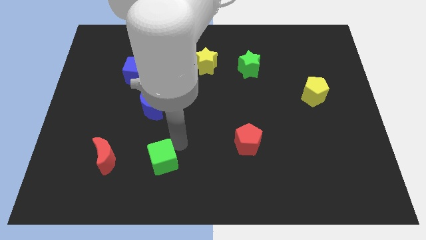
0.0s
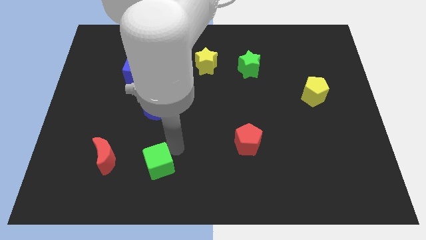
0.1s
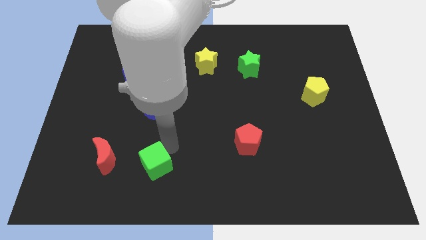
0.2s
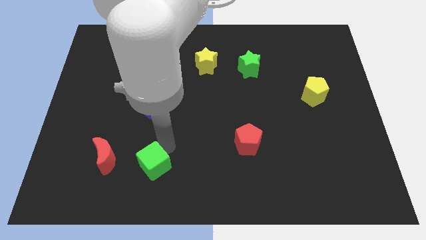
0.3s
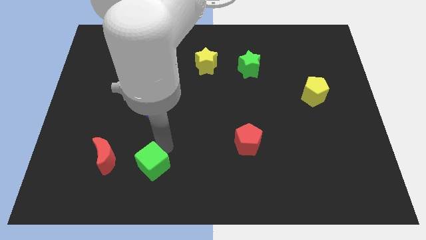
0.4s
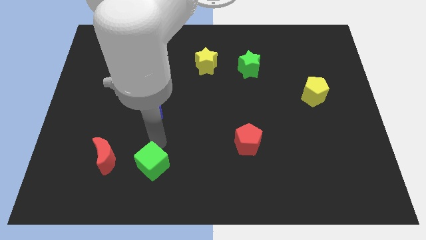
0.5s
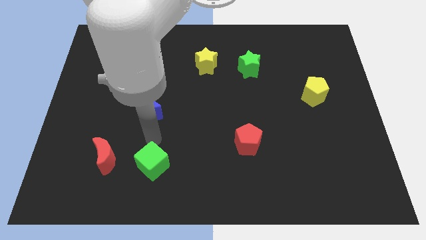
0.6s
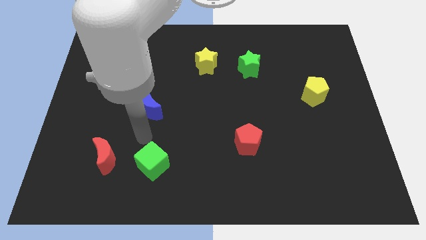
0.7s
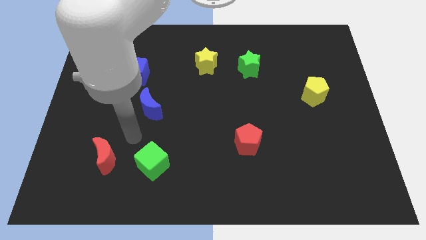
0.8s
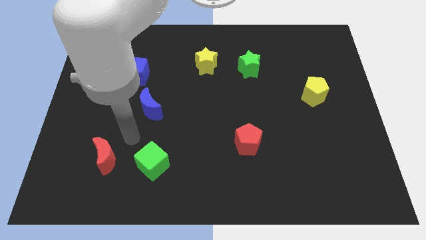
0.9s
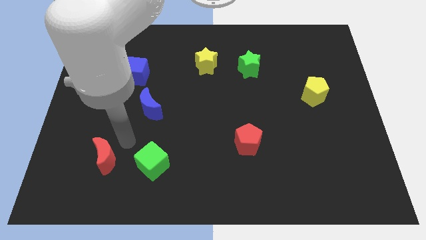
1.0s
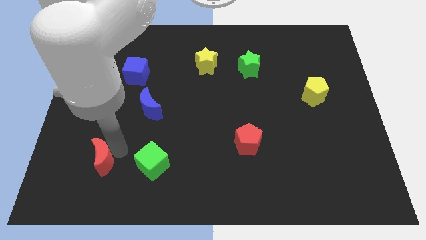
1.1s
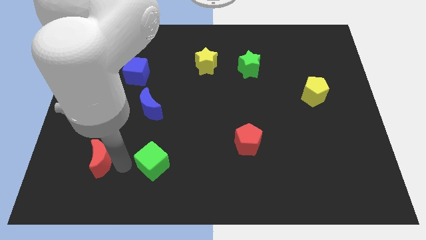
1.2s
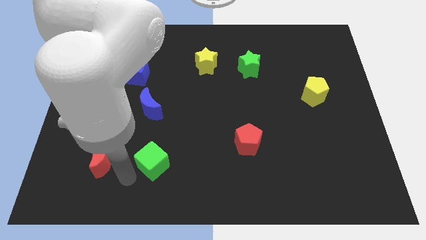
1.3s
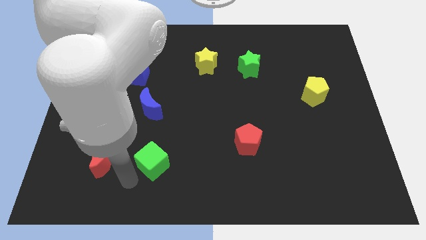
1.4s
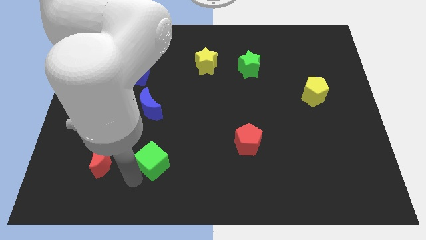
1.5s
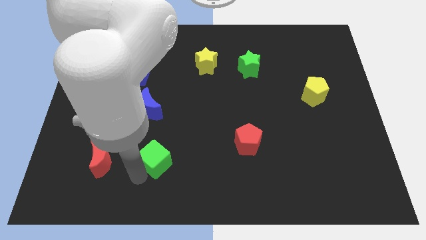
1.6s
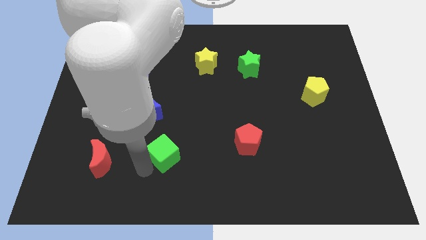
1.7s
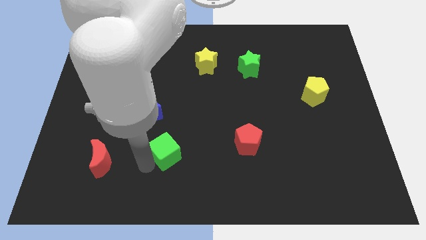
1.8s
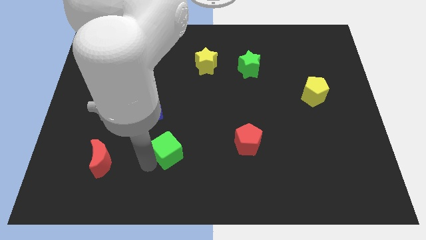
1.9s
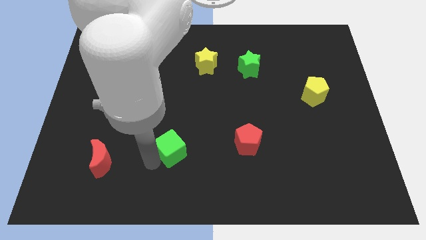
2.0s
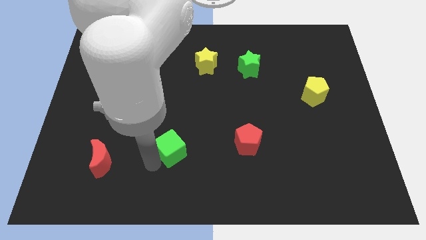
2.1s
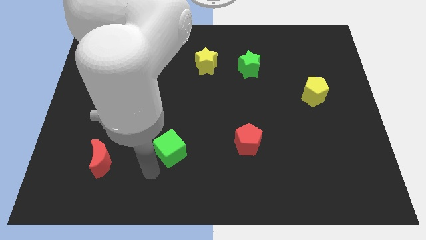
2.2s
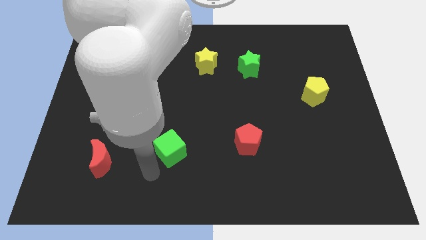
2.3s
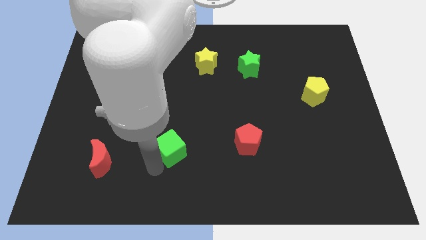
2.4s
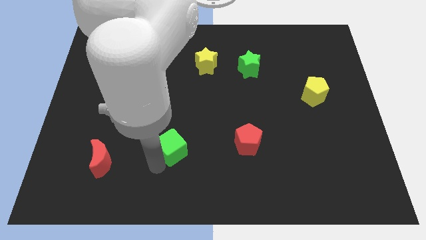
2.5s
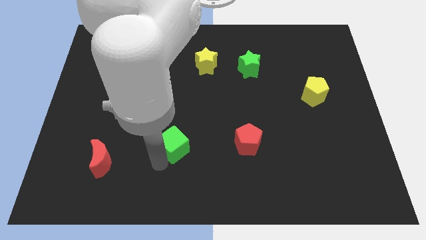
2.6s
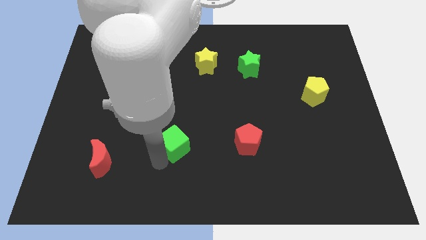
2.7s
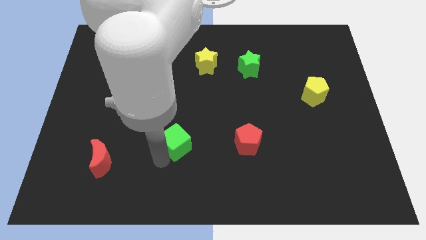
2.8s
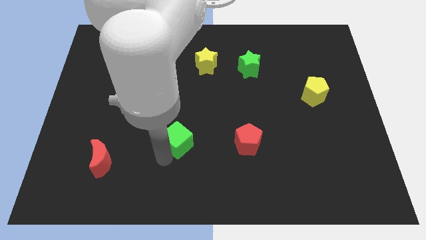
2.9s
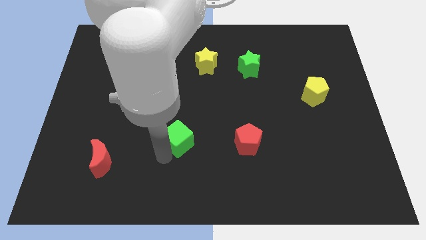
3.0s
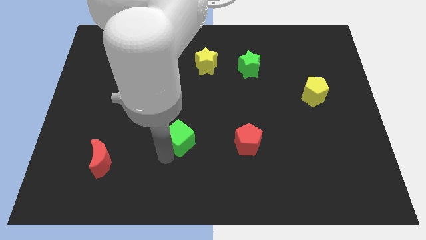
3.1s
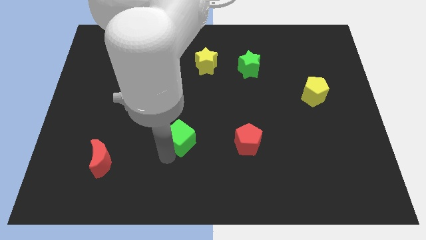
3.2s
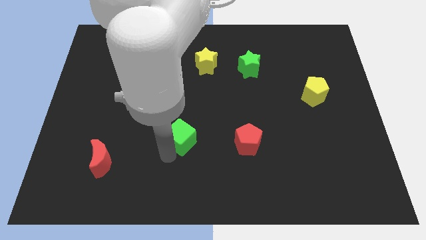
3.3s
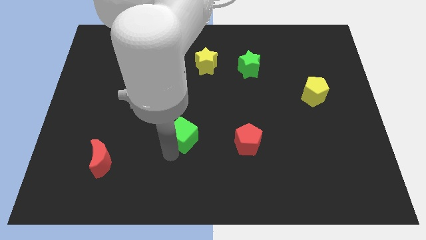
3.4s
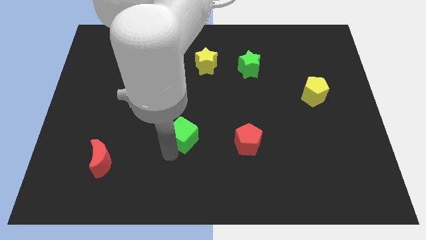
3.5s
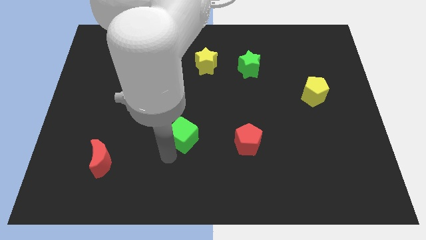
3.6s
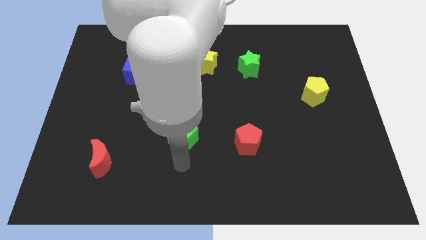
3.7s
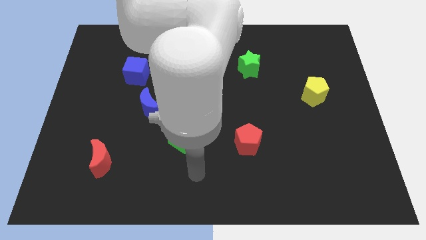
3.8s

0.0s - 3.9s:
push the green cube diagonal to the blue crescent

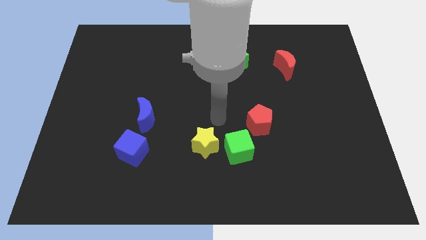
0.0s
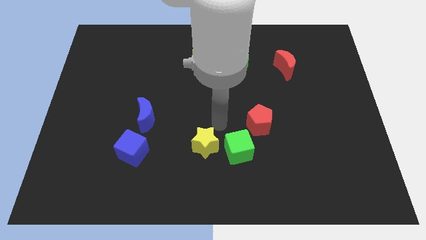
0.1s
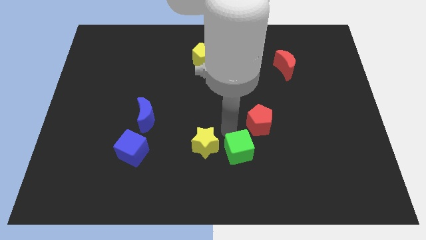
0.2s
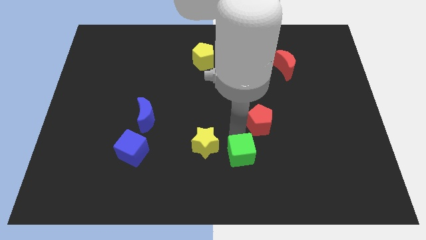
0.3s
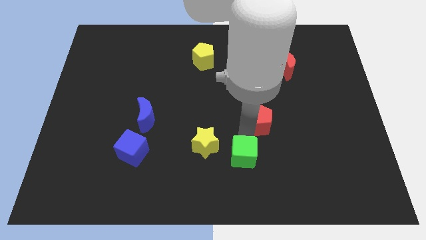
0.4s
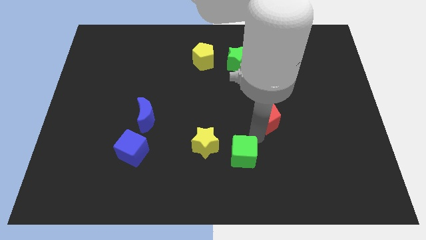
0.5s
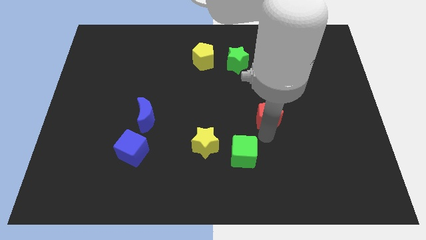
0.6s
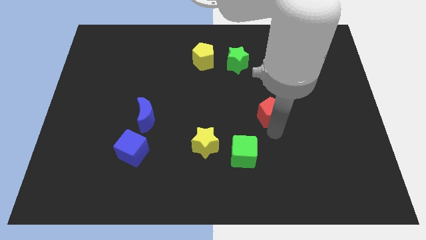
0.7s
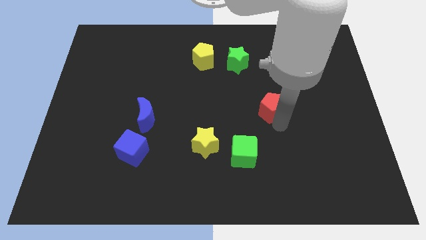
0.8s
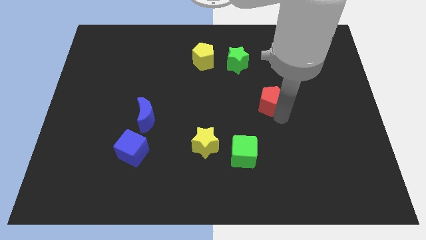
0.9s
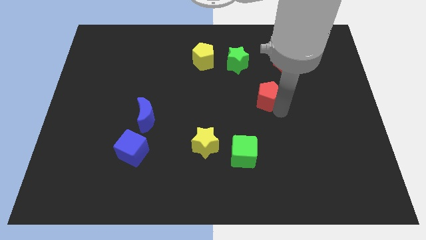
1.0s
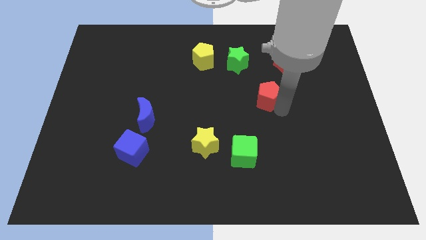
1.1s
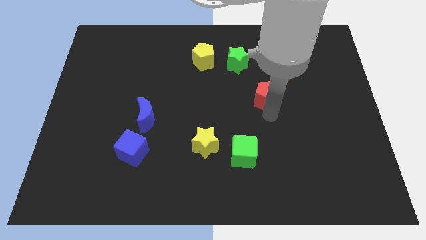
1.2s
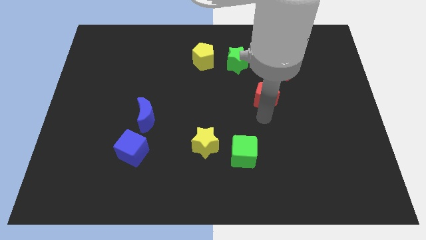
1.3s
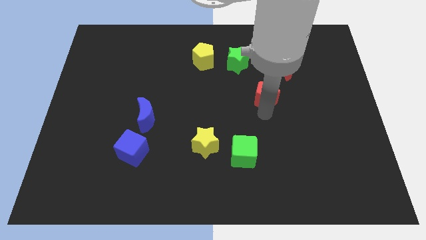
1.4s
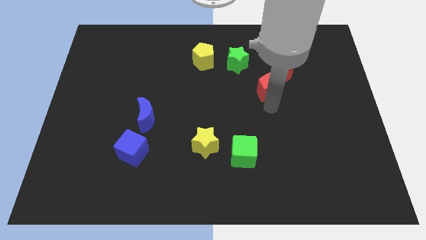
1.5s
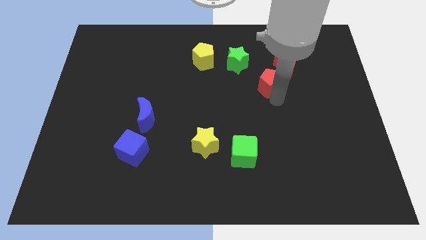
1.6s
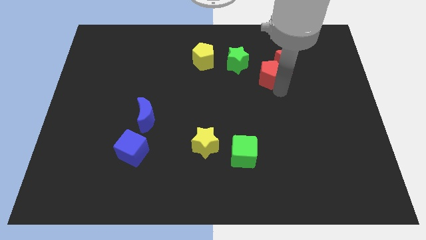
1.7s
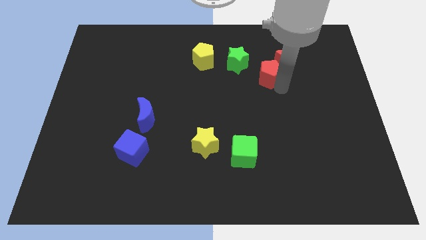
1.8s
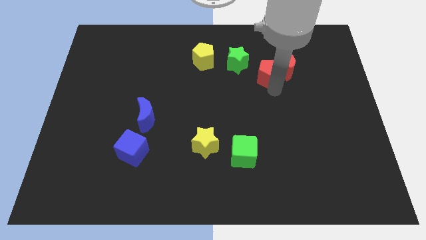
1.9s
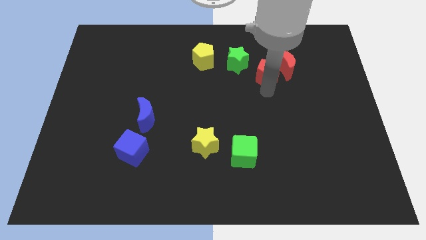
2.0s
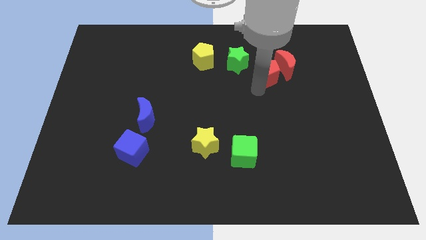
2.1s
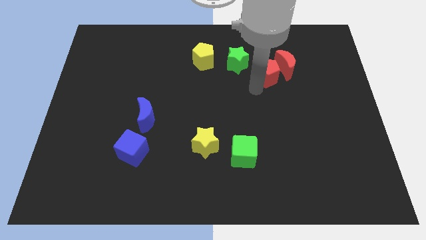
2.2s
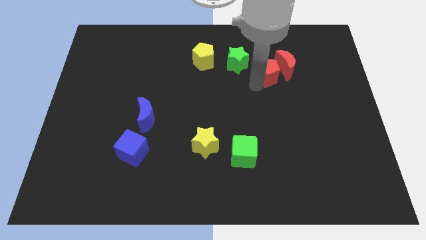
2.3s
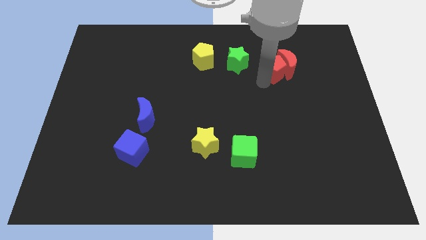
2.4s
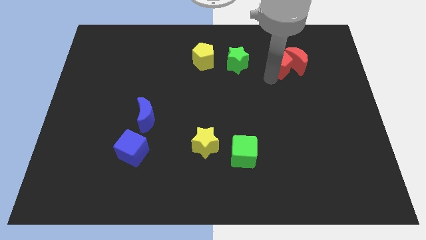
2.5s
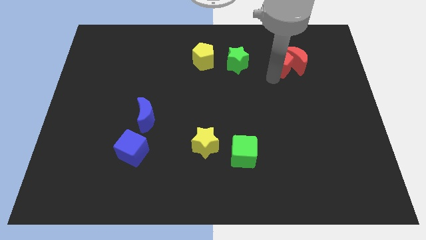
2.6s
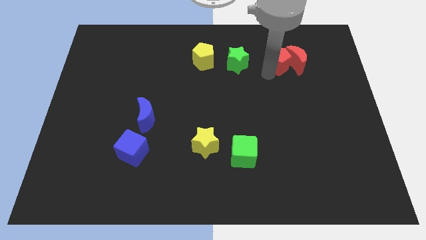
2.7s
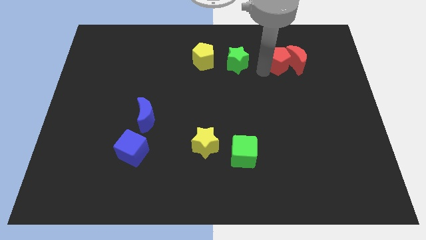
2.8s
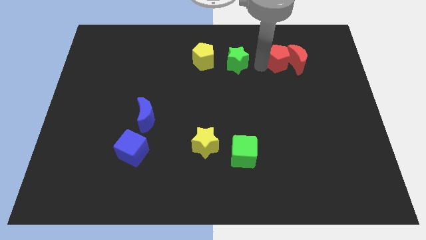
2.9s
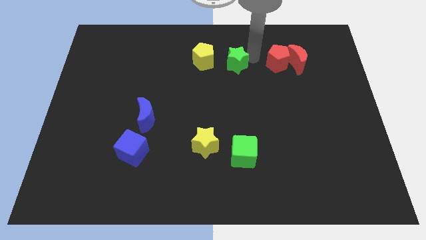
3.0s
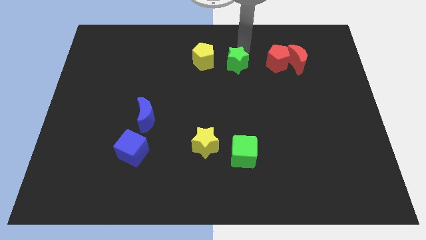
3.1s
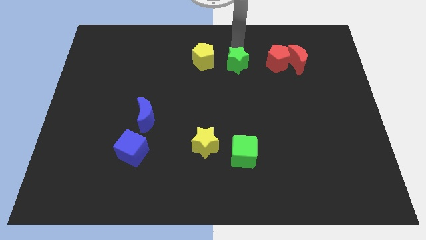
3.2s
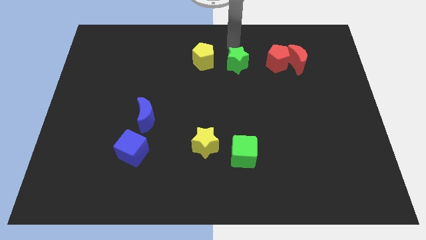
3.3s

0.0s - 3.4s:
drag the red pentagon close to red moon

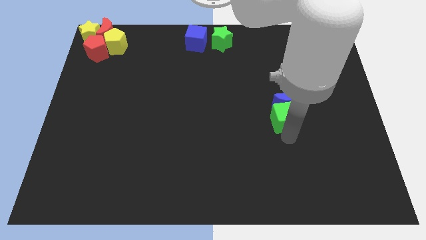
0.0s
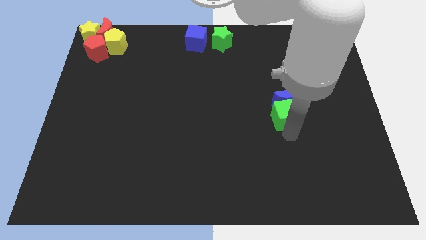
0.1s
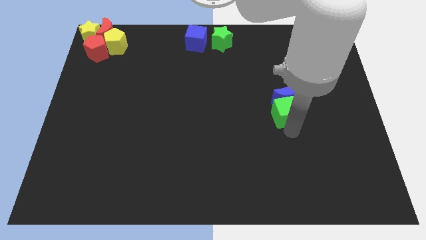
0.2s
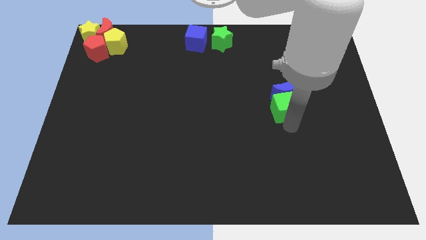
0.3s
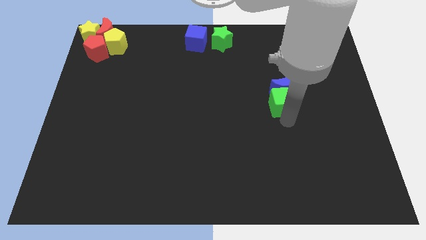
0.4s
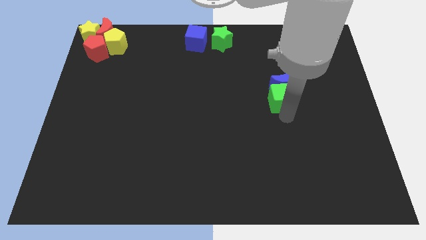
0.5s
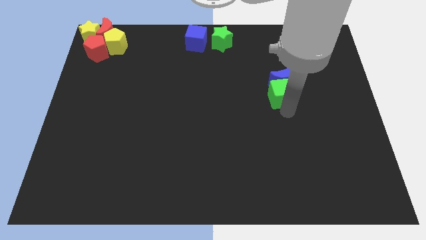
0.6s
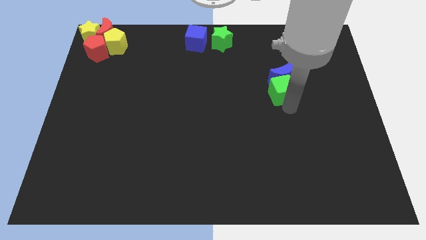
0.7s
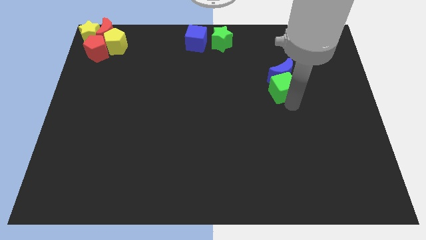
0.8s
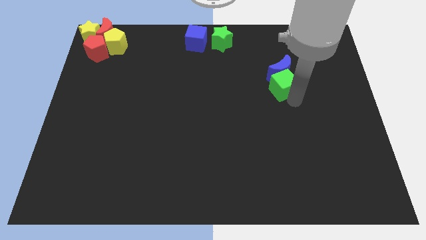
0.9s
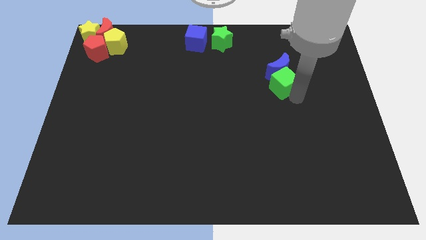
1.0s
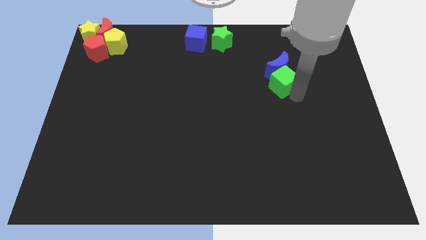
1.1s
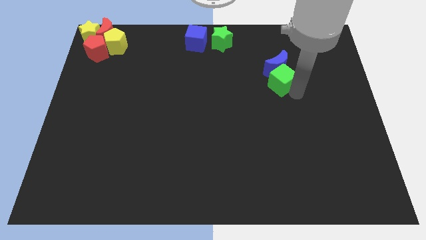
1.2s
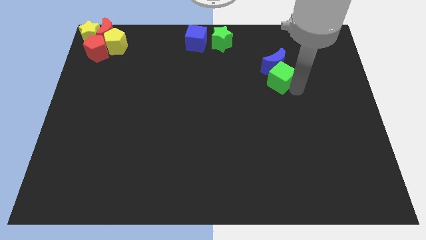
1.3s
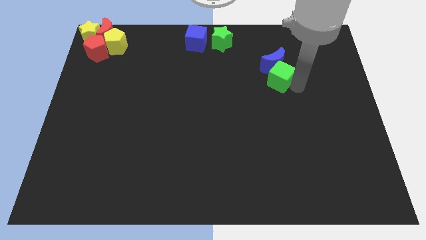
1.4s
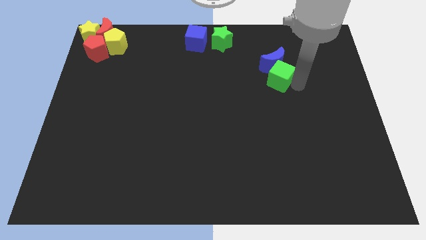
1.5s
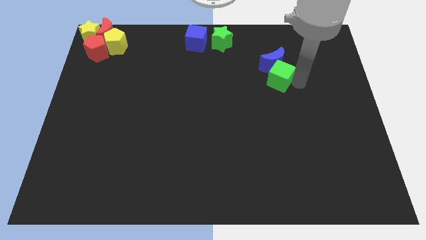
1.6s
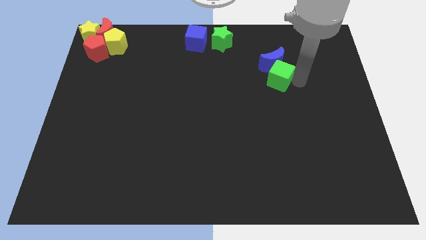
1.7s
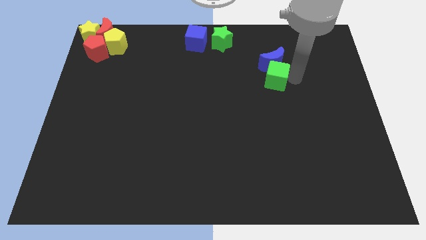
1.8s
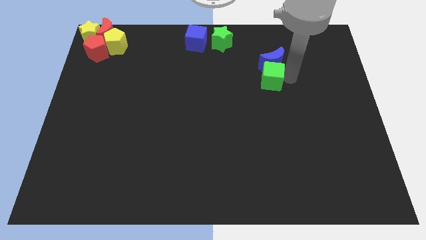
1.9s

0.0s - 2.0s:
push the blue crescent with green cube
